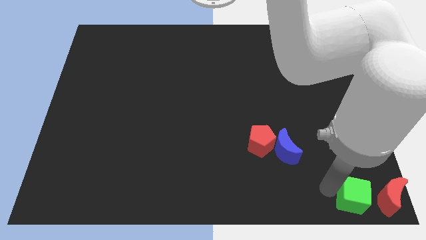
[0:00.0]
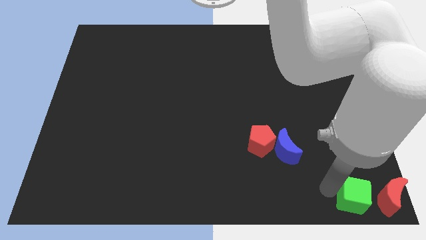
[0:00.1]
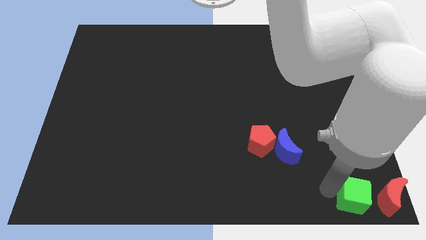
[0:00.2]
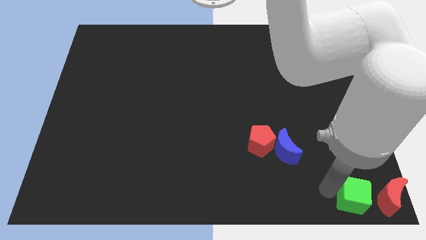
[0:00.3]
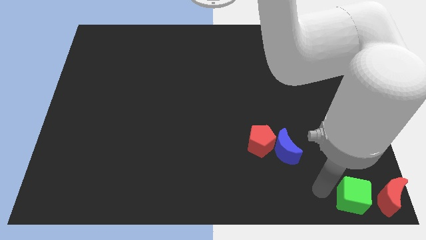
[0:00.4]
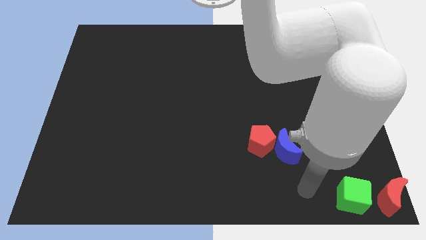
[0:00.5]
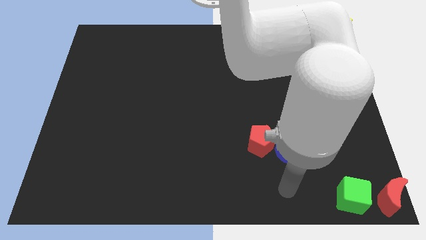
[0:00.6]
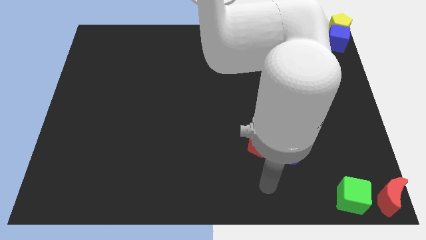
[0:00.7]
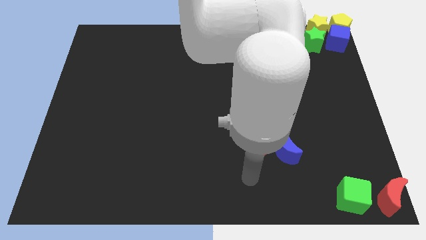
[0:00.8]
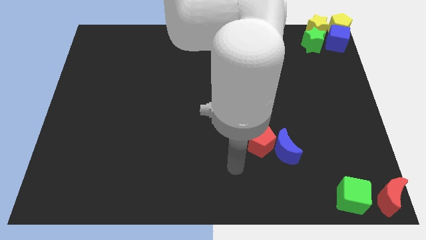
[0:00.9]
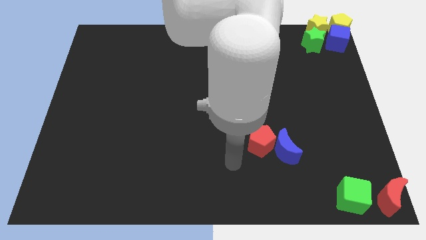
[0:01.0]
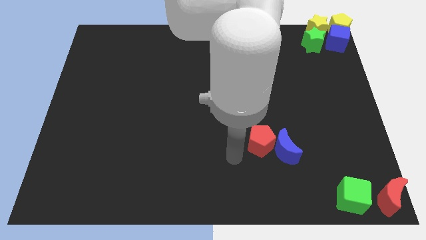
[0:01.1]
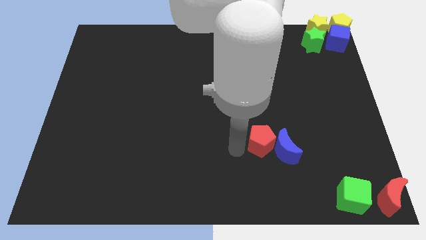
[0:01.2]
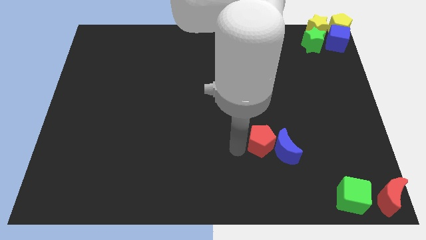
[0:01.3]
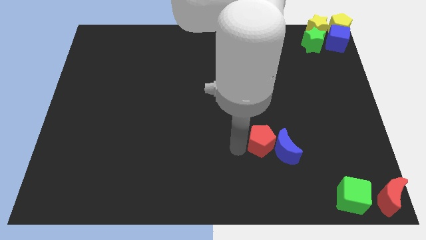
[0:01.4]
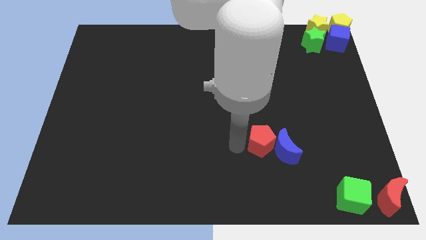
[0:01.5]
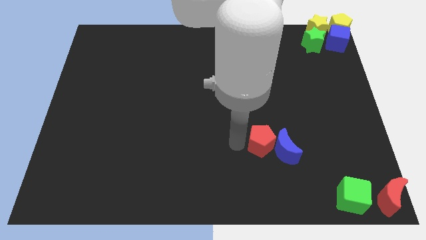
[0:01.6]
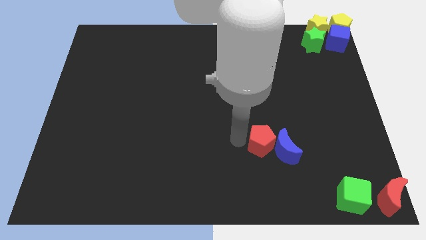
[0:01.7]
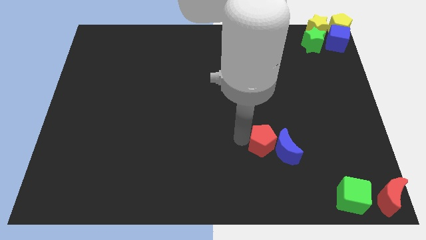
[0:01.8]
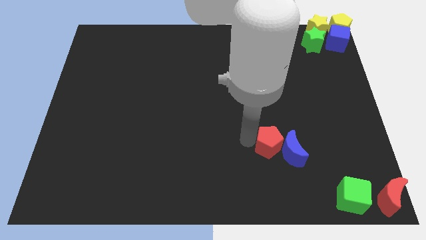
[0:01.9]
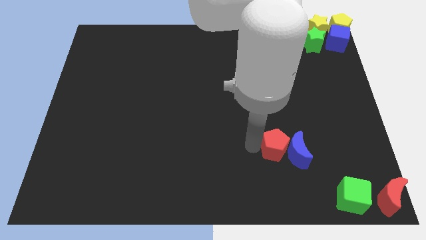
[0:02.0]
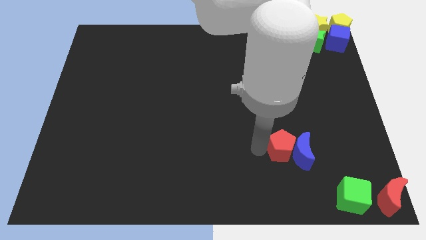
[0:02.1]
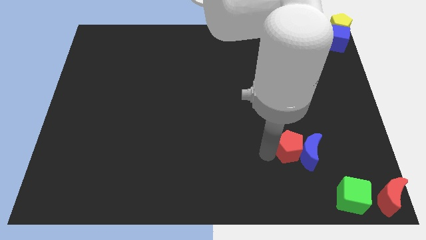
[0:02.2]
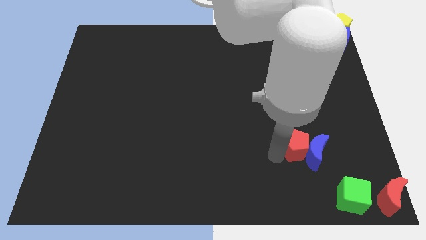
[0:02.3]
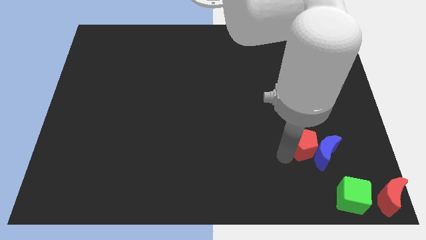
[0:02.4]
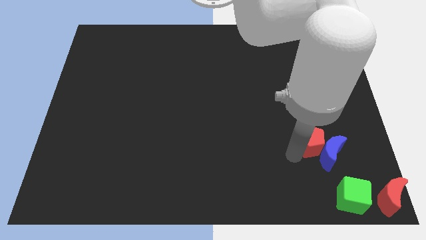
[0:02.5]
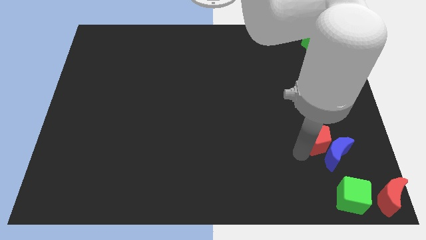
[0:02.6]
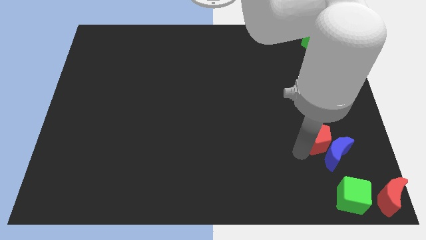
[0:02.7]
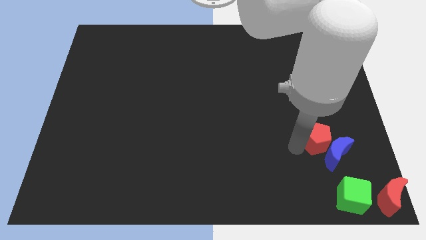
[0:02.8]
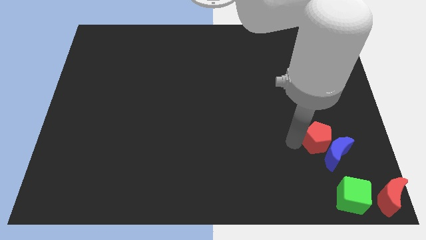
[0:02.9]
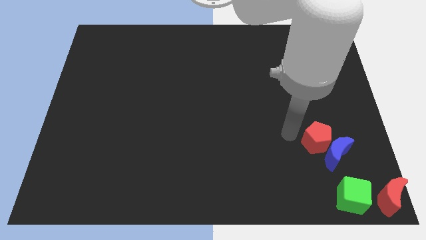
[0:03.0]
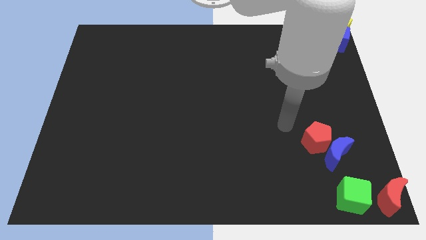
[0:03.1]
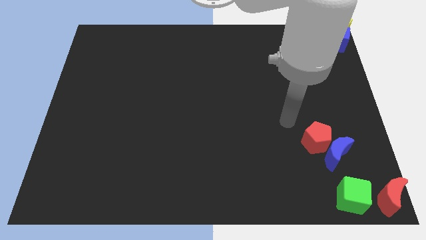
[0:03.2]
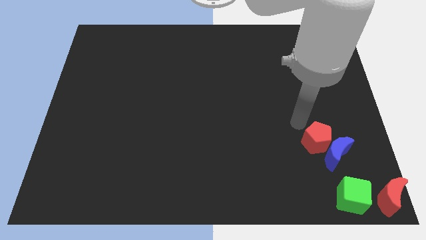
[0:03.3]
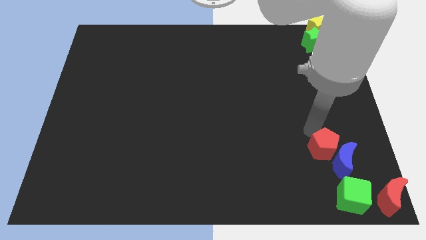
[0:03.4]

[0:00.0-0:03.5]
place the blue moon and red pentagon diagonally top left to the green cube

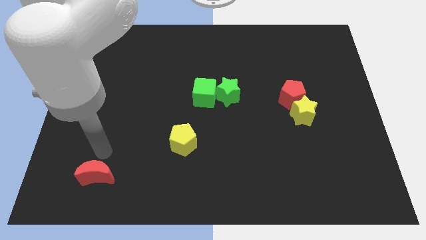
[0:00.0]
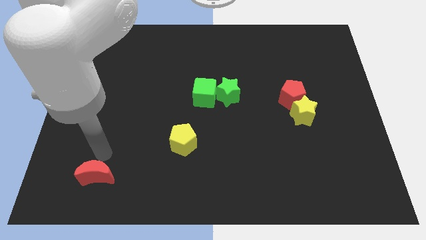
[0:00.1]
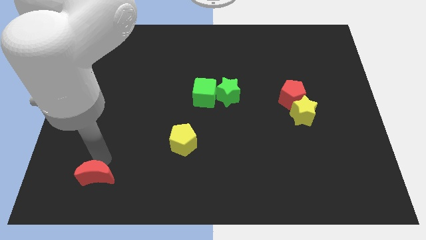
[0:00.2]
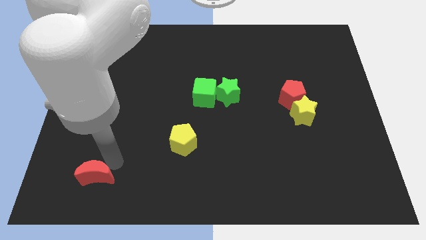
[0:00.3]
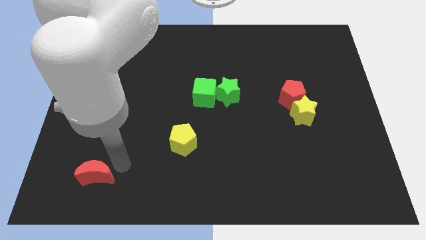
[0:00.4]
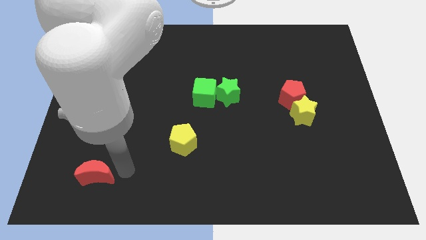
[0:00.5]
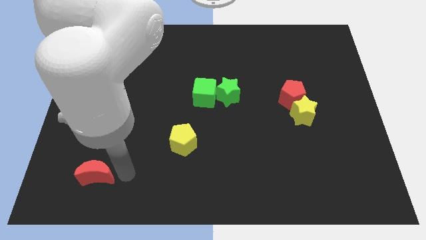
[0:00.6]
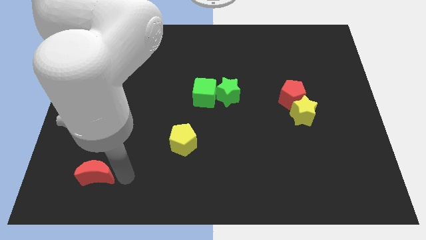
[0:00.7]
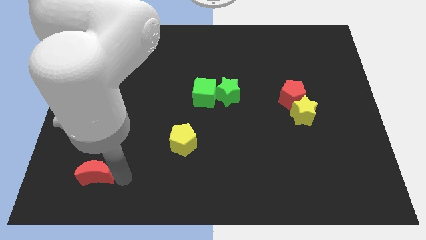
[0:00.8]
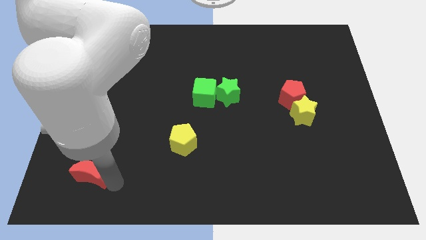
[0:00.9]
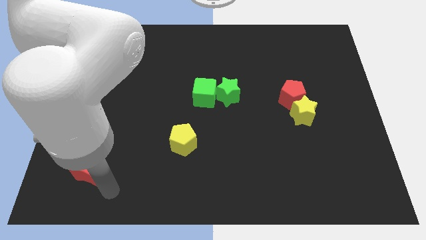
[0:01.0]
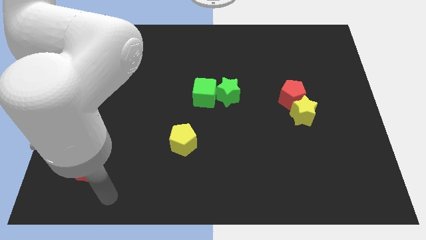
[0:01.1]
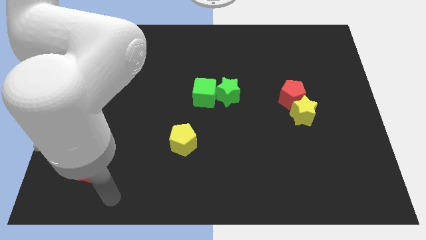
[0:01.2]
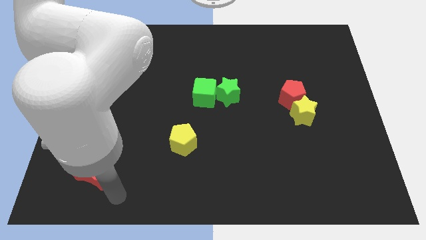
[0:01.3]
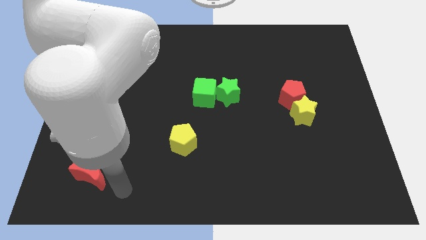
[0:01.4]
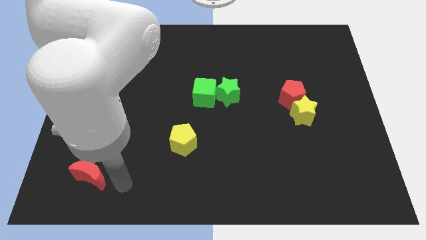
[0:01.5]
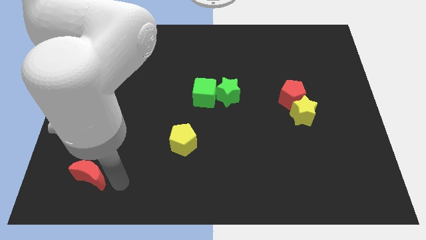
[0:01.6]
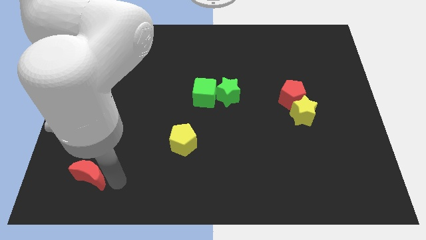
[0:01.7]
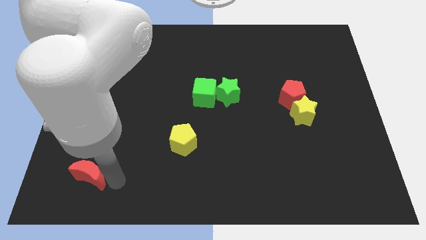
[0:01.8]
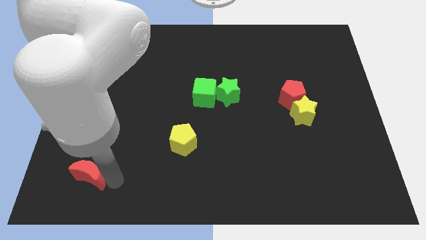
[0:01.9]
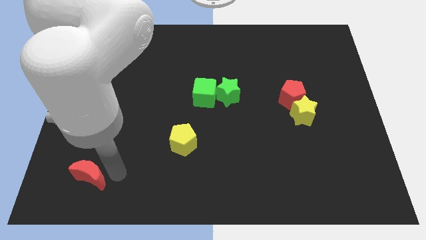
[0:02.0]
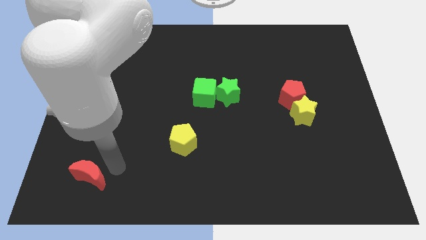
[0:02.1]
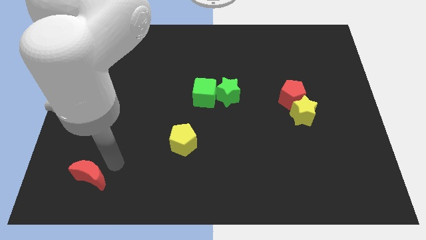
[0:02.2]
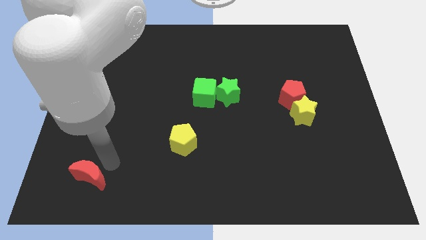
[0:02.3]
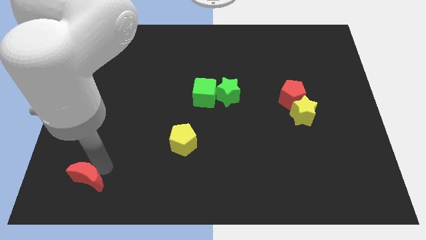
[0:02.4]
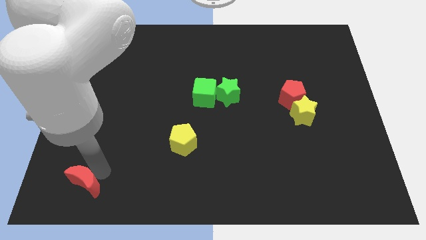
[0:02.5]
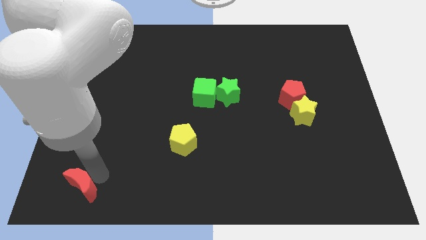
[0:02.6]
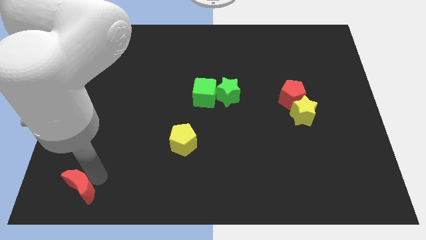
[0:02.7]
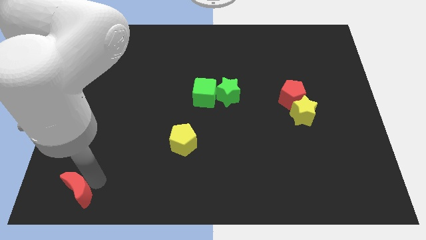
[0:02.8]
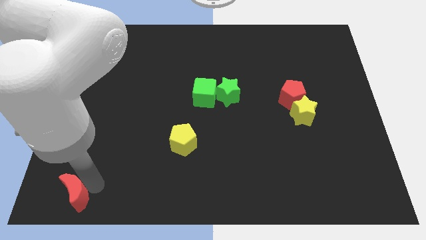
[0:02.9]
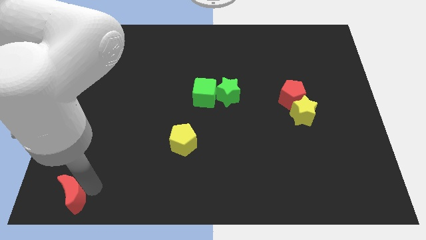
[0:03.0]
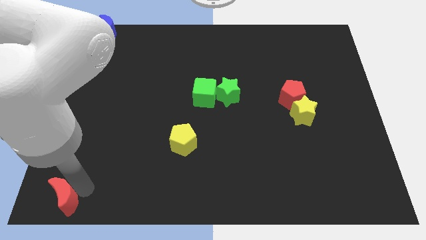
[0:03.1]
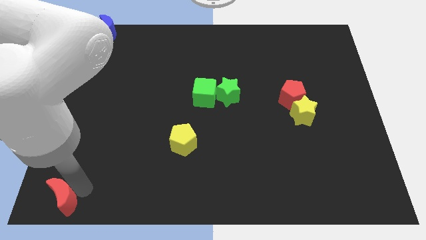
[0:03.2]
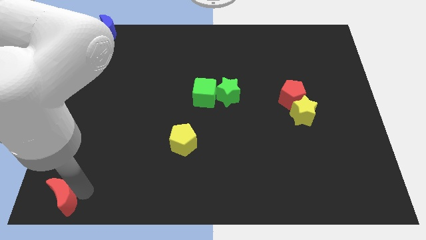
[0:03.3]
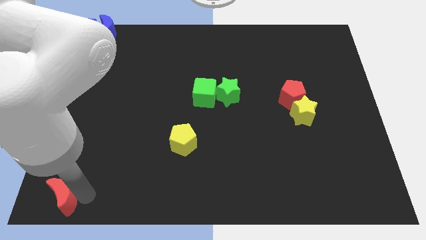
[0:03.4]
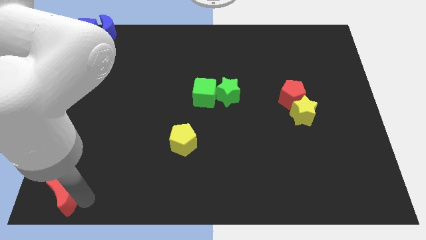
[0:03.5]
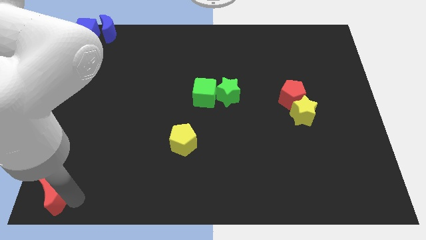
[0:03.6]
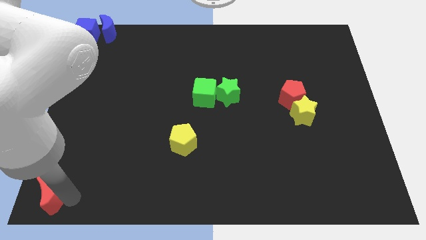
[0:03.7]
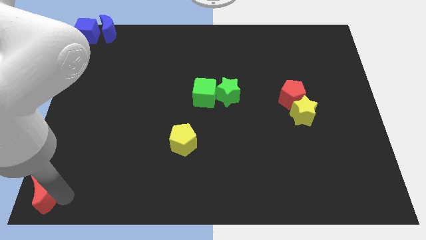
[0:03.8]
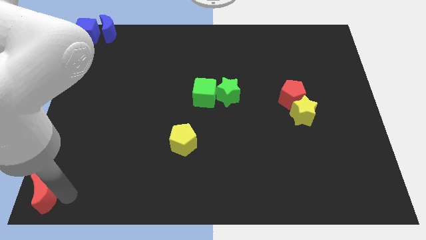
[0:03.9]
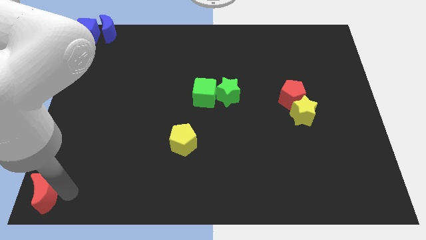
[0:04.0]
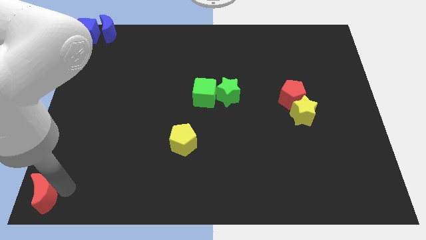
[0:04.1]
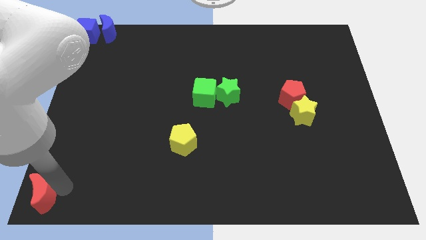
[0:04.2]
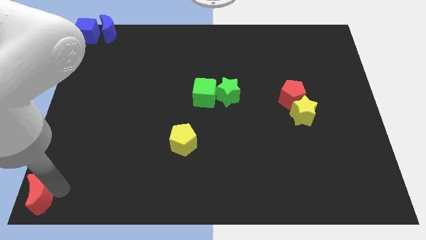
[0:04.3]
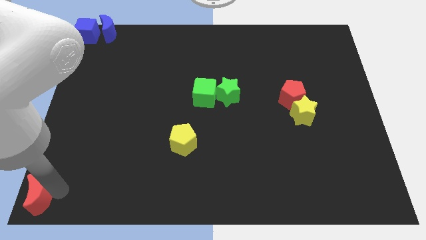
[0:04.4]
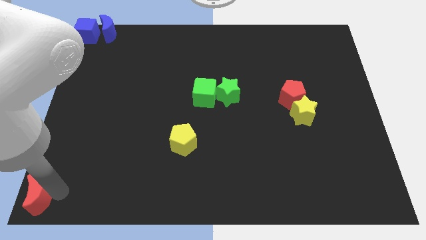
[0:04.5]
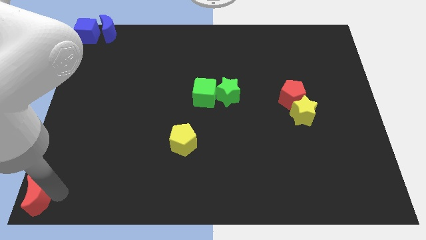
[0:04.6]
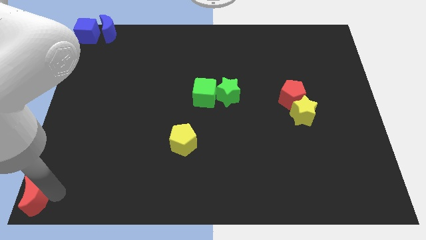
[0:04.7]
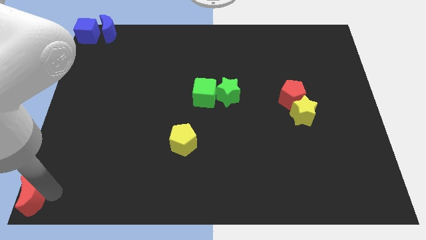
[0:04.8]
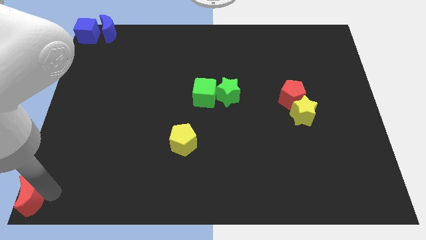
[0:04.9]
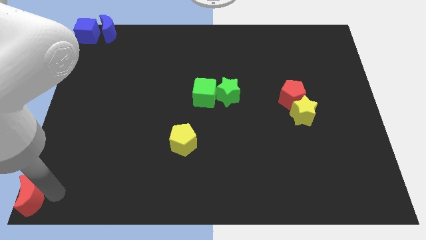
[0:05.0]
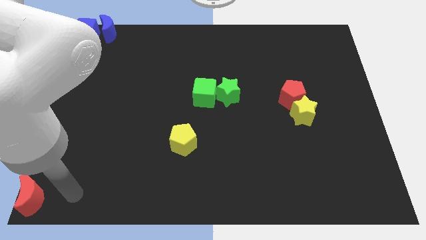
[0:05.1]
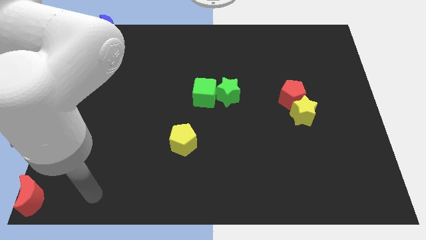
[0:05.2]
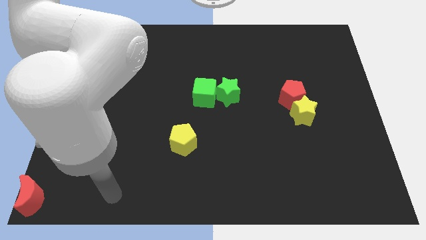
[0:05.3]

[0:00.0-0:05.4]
move the red moon to the bottom left corner
